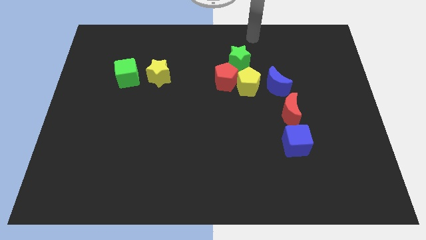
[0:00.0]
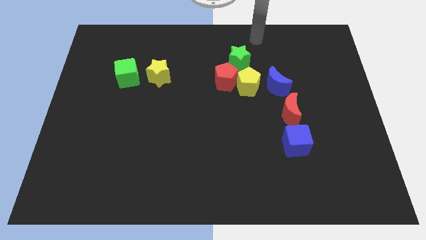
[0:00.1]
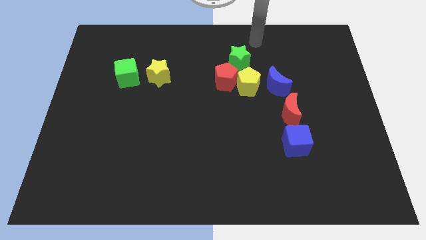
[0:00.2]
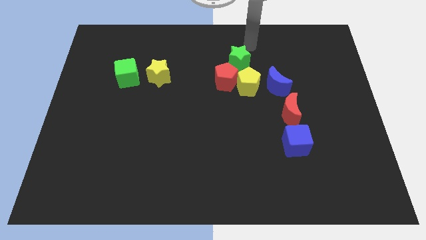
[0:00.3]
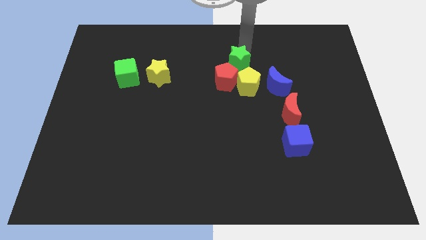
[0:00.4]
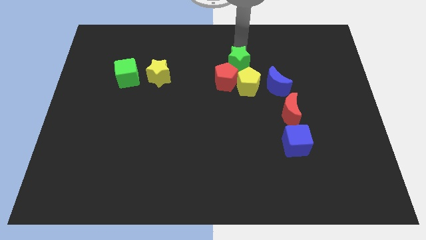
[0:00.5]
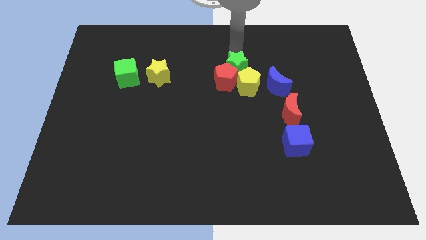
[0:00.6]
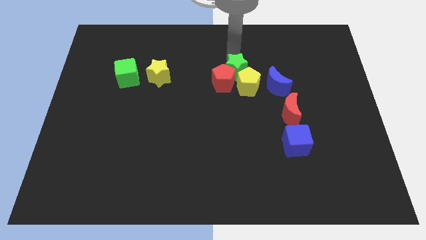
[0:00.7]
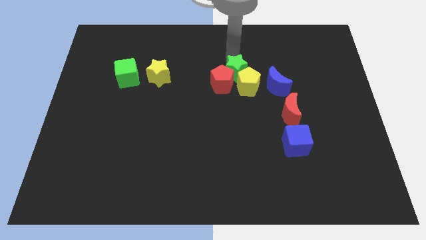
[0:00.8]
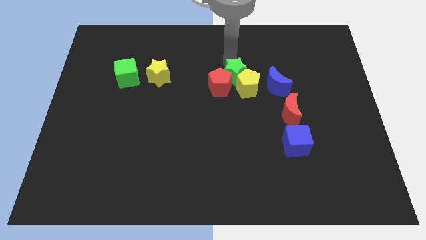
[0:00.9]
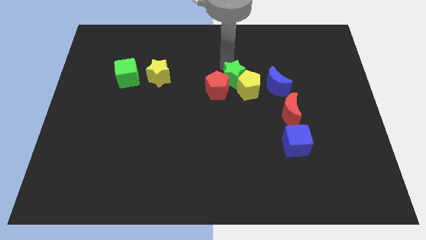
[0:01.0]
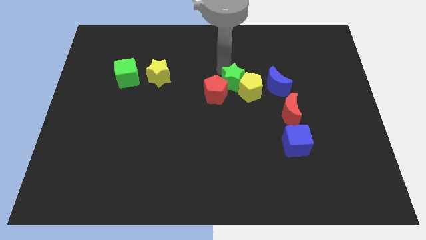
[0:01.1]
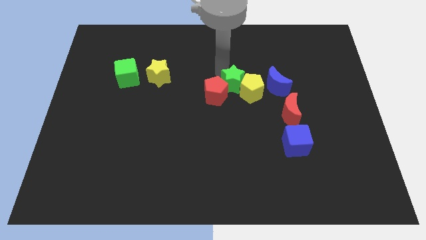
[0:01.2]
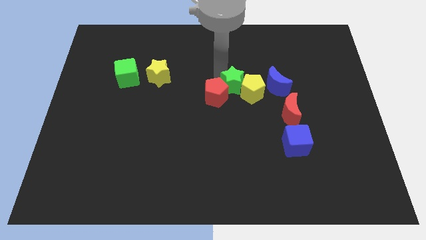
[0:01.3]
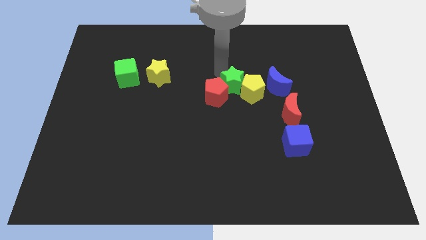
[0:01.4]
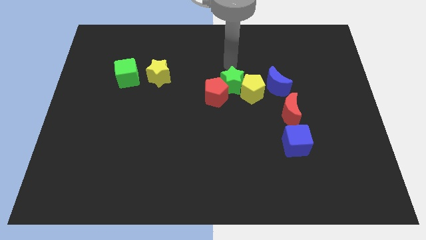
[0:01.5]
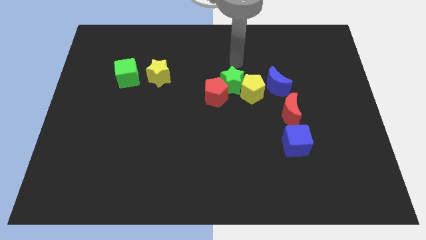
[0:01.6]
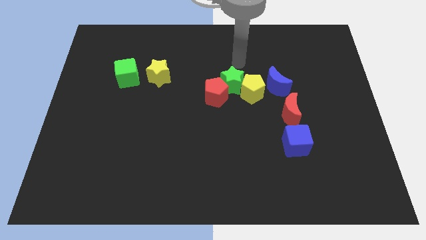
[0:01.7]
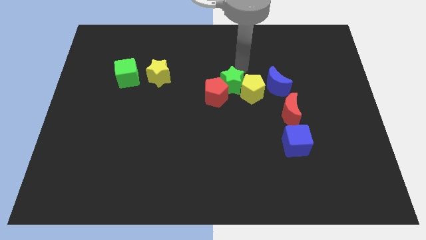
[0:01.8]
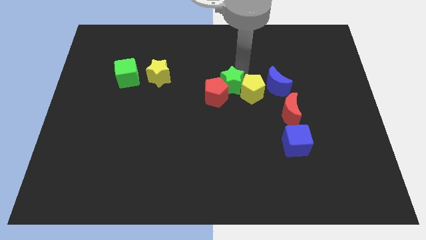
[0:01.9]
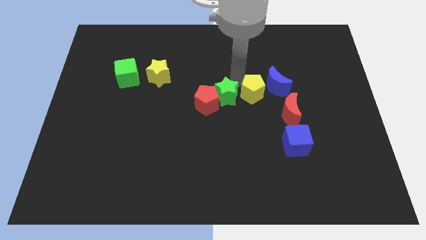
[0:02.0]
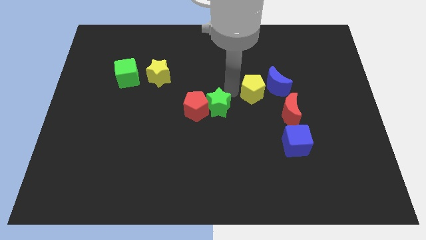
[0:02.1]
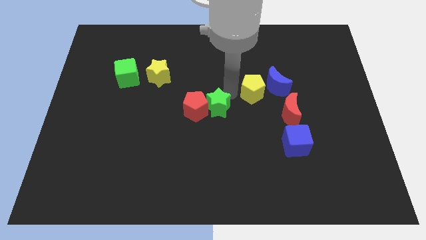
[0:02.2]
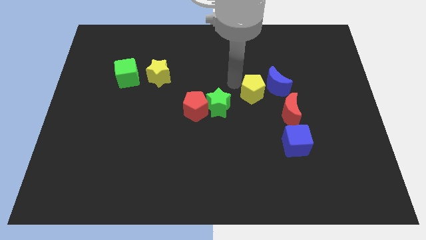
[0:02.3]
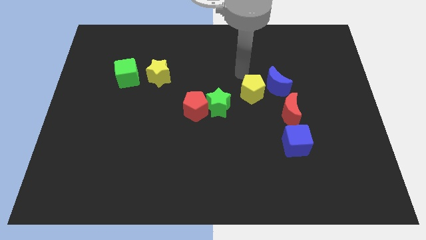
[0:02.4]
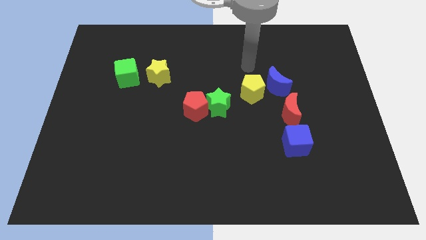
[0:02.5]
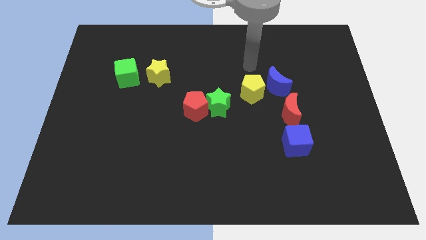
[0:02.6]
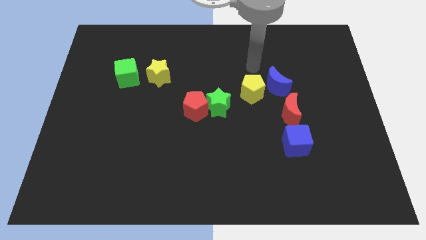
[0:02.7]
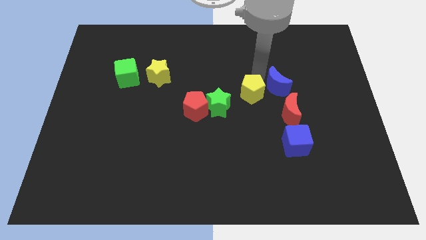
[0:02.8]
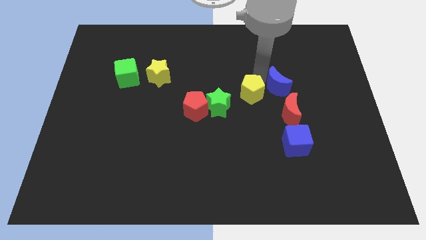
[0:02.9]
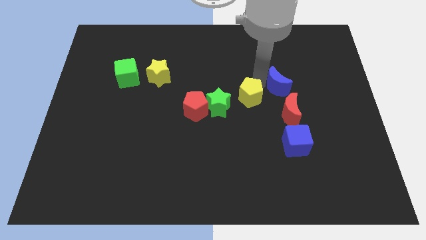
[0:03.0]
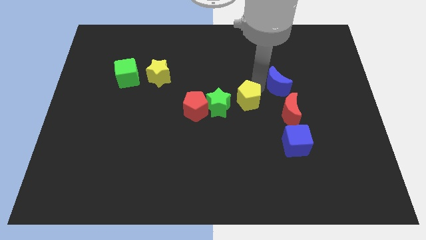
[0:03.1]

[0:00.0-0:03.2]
place the green star and red pentagon towards the center of the board

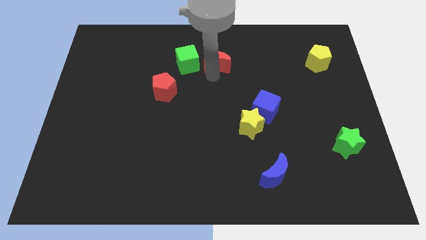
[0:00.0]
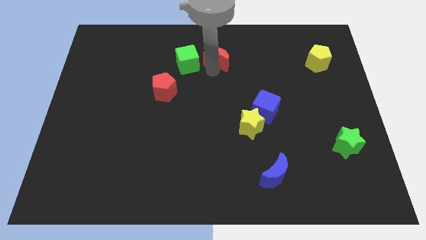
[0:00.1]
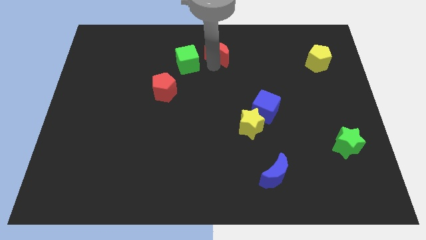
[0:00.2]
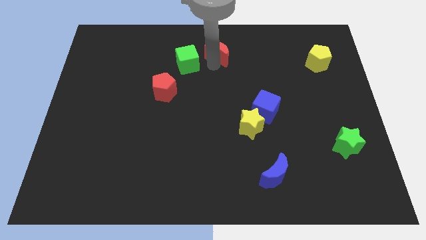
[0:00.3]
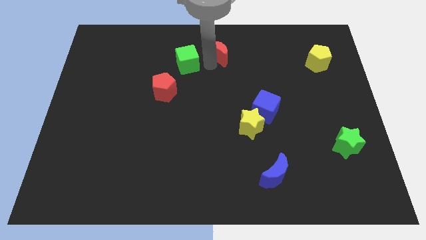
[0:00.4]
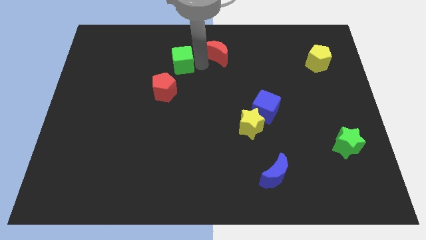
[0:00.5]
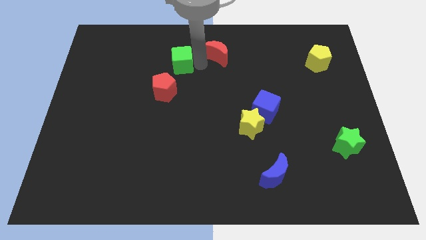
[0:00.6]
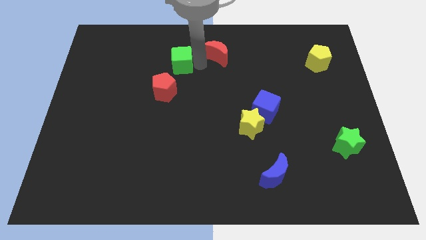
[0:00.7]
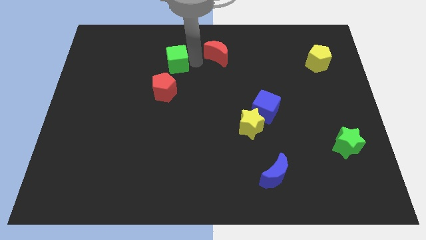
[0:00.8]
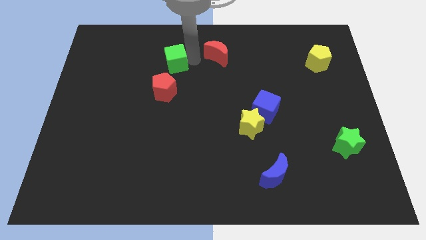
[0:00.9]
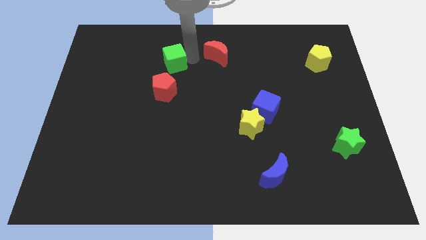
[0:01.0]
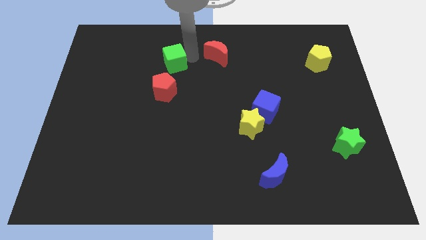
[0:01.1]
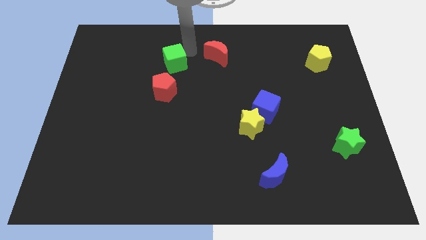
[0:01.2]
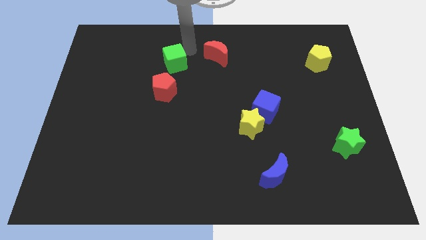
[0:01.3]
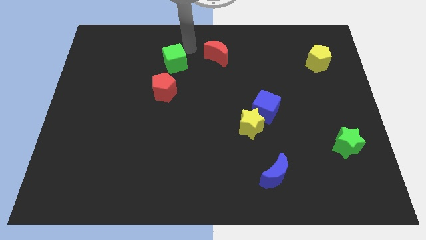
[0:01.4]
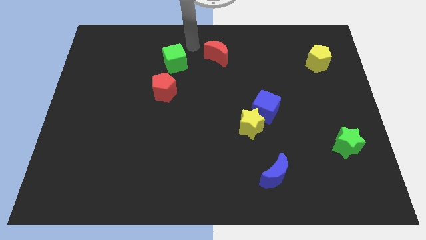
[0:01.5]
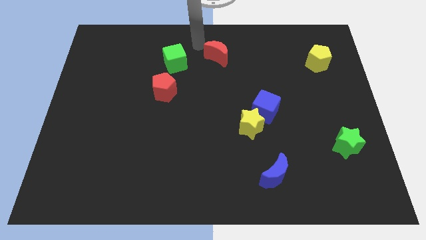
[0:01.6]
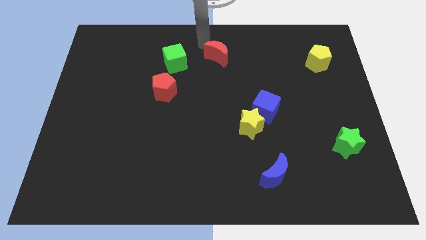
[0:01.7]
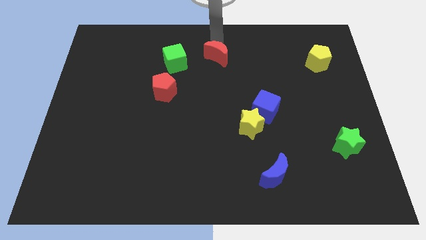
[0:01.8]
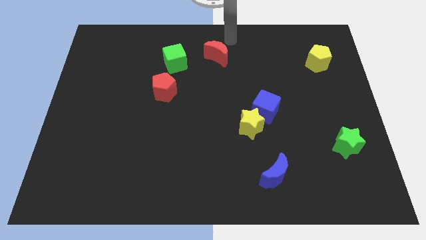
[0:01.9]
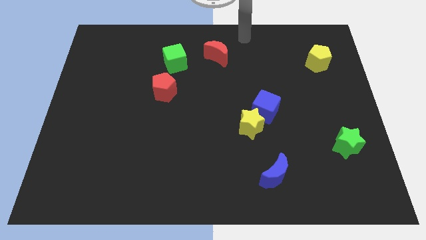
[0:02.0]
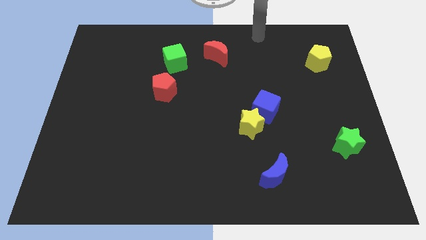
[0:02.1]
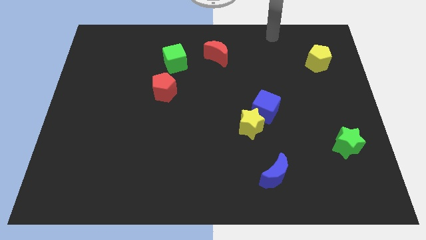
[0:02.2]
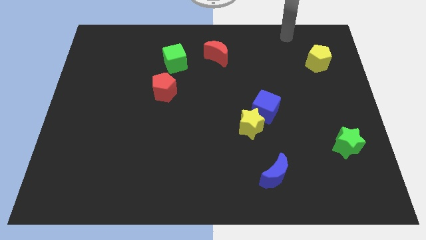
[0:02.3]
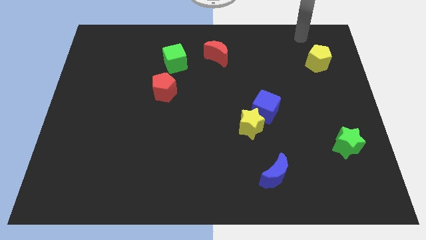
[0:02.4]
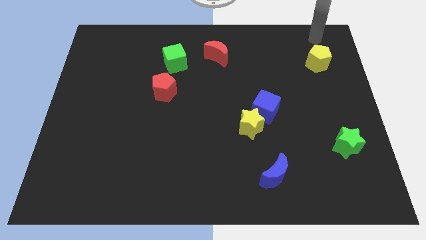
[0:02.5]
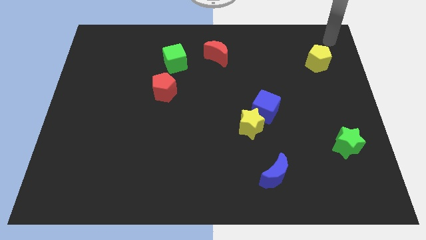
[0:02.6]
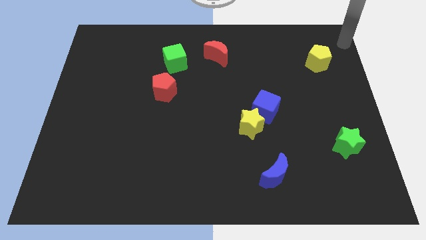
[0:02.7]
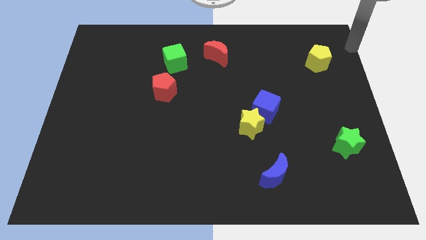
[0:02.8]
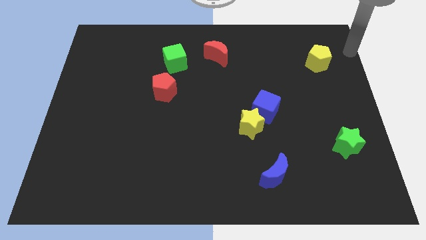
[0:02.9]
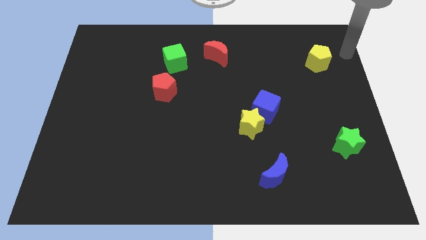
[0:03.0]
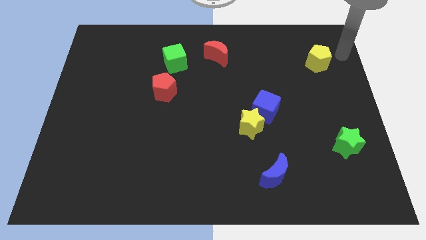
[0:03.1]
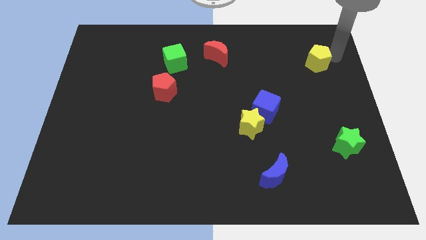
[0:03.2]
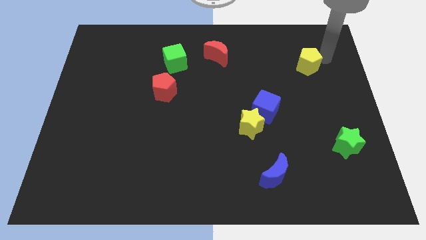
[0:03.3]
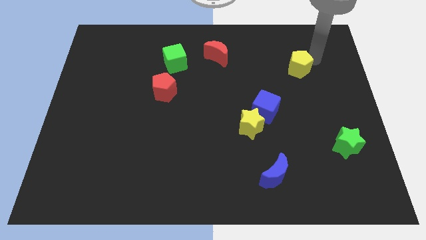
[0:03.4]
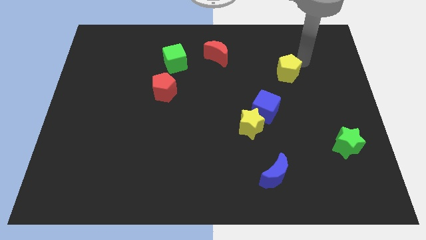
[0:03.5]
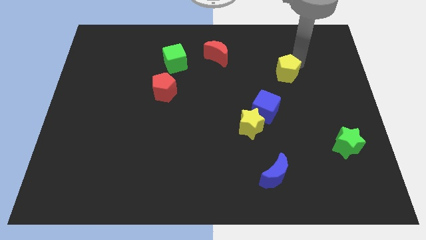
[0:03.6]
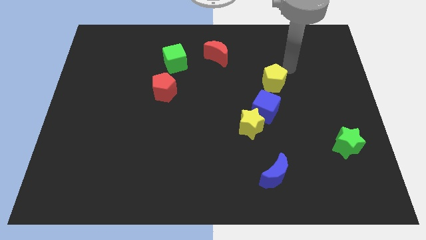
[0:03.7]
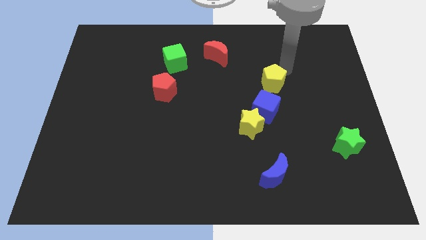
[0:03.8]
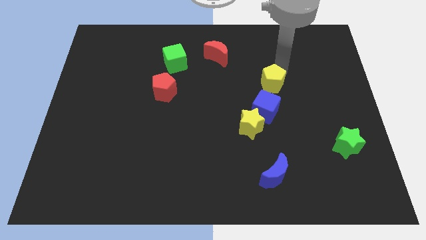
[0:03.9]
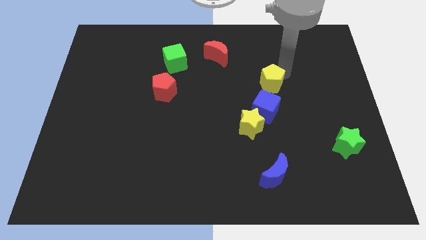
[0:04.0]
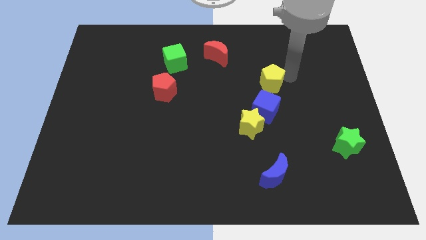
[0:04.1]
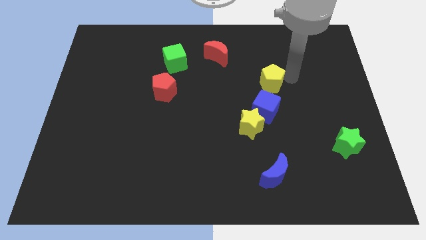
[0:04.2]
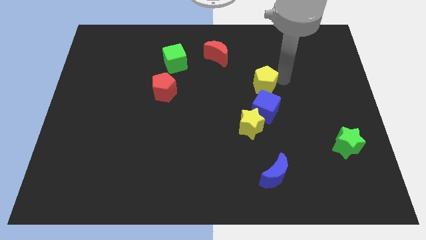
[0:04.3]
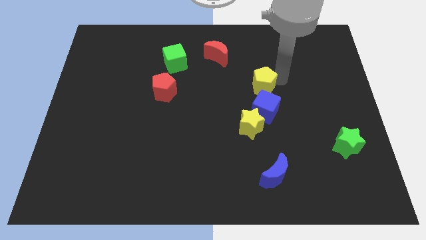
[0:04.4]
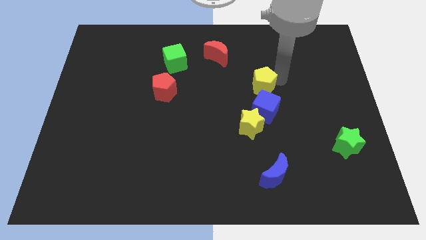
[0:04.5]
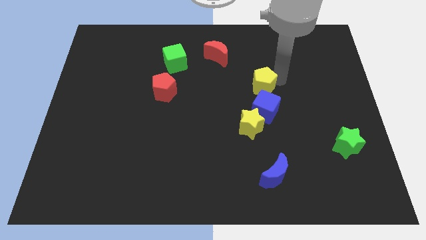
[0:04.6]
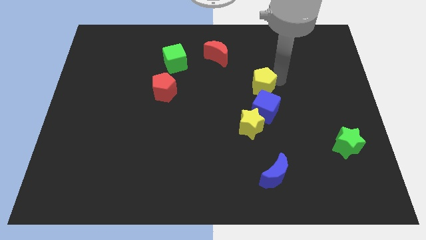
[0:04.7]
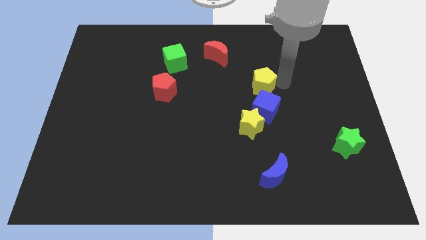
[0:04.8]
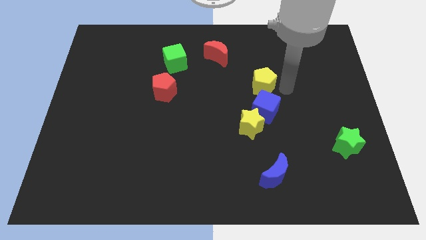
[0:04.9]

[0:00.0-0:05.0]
move the yellow pentagon to the top of the blue cube

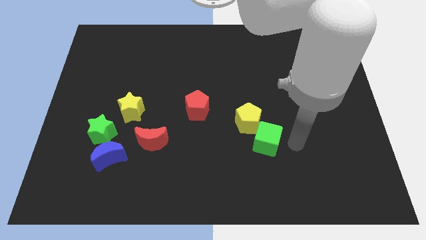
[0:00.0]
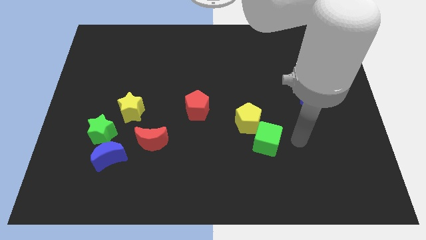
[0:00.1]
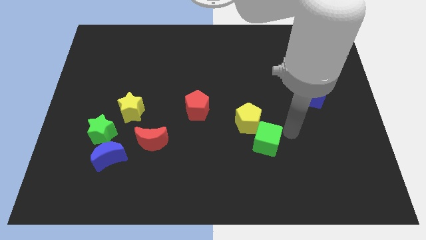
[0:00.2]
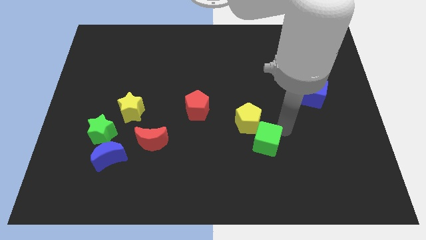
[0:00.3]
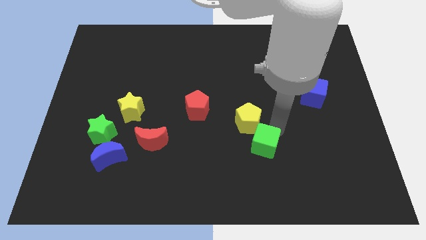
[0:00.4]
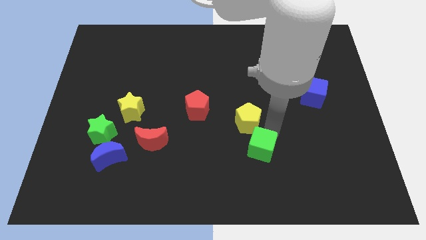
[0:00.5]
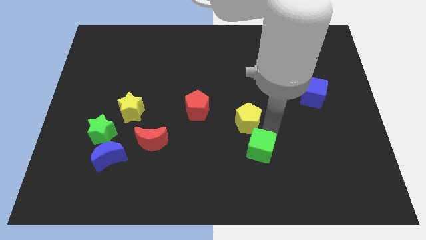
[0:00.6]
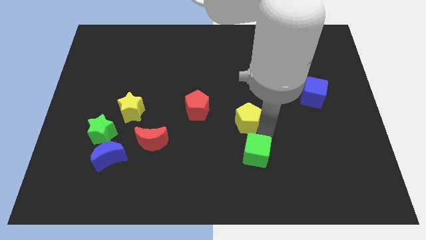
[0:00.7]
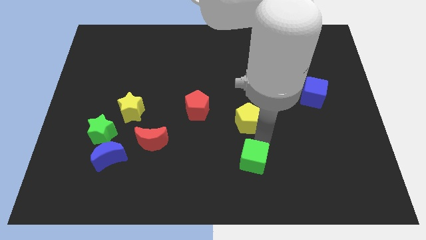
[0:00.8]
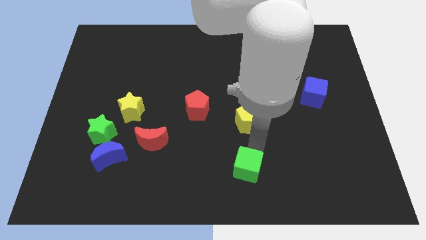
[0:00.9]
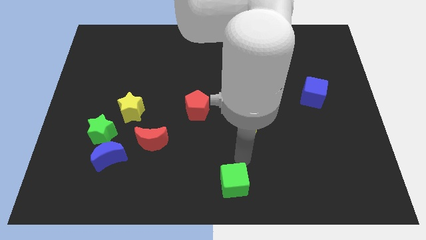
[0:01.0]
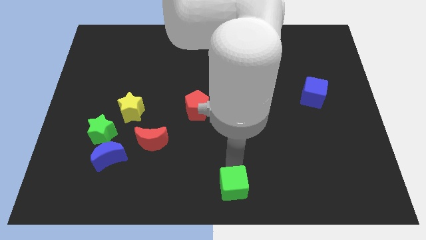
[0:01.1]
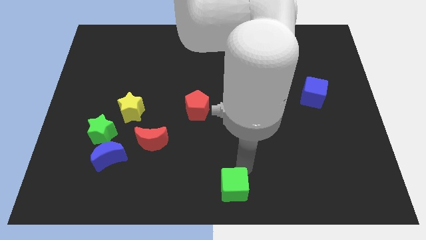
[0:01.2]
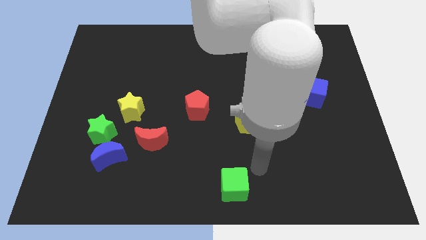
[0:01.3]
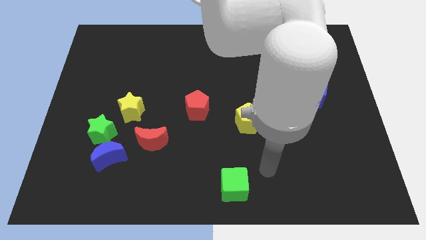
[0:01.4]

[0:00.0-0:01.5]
slide the green cube towards the bottom center of the board
